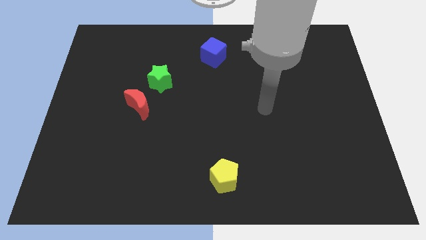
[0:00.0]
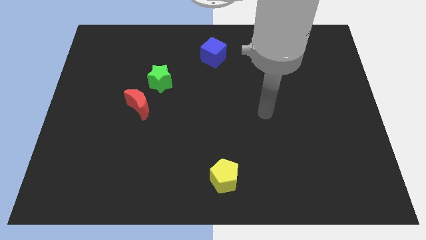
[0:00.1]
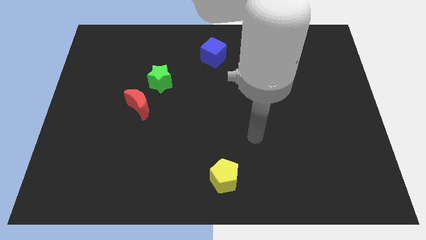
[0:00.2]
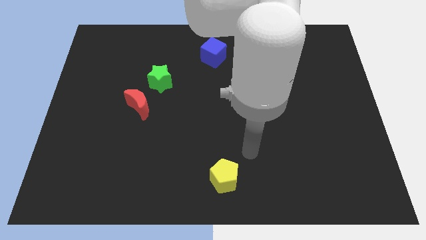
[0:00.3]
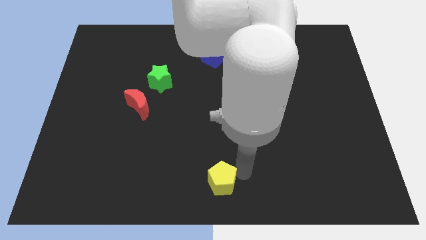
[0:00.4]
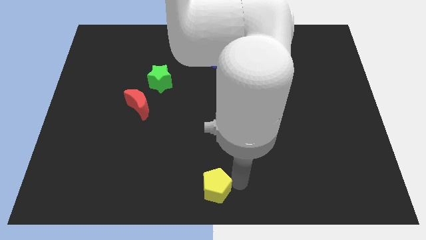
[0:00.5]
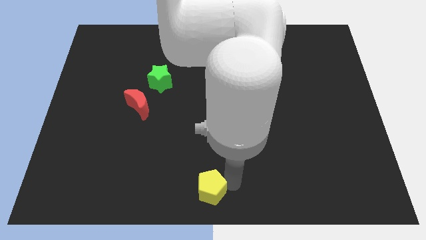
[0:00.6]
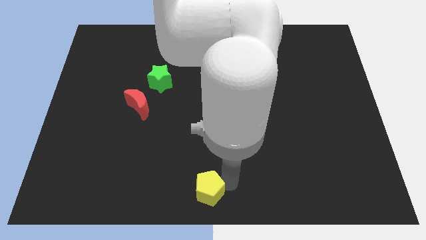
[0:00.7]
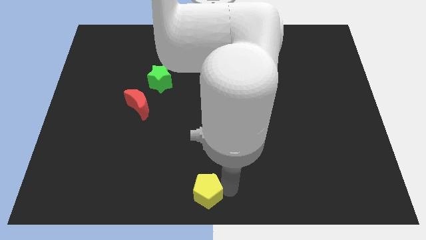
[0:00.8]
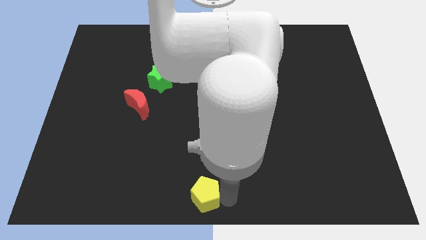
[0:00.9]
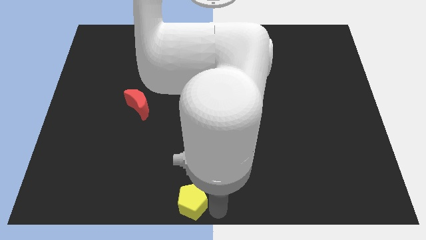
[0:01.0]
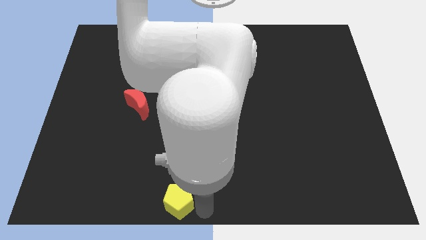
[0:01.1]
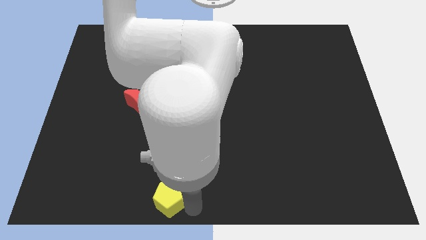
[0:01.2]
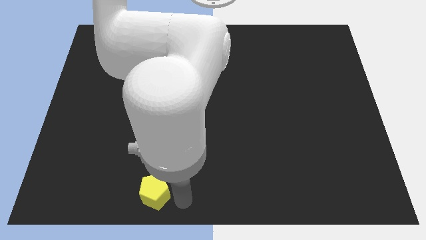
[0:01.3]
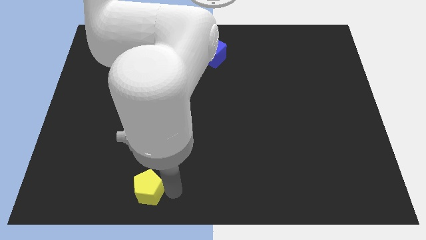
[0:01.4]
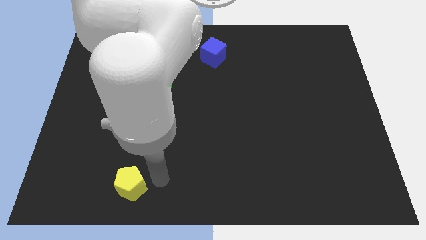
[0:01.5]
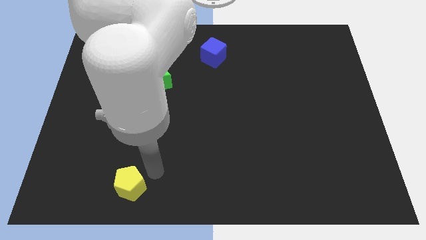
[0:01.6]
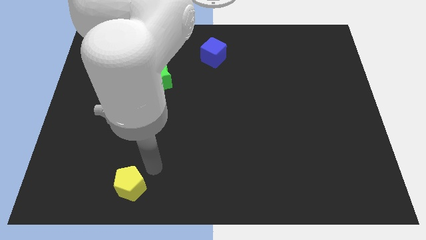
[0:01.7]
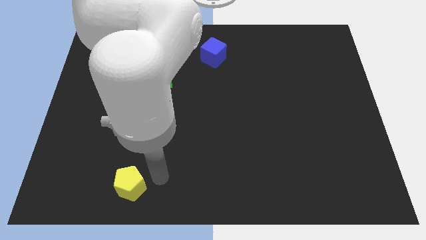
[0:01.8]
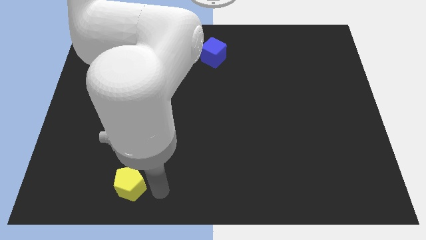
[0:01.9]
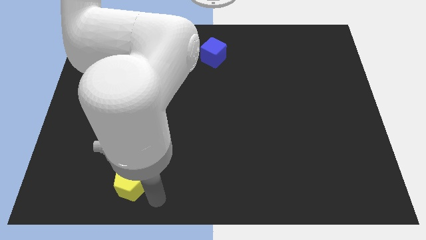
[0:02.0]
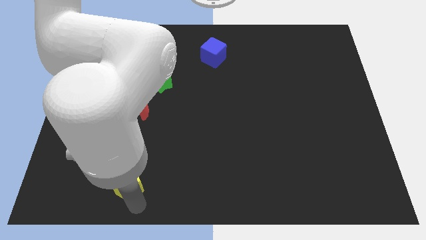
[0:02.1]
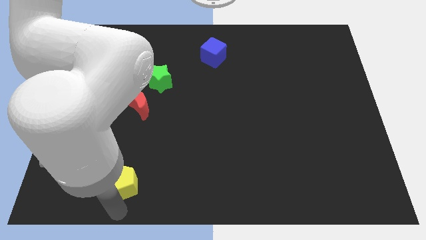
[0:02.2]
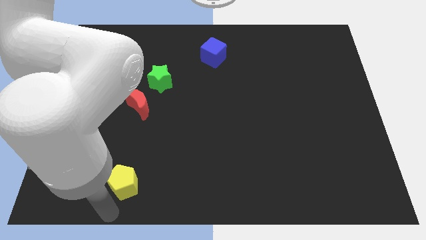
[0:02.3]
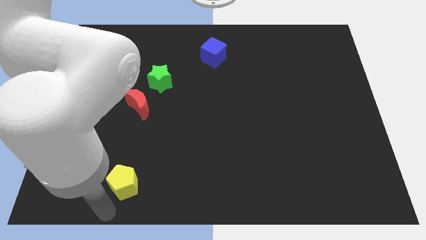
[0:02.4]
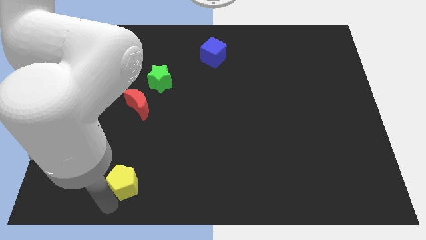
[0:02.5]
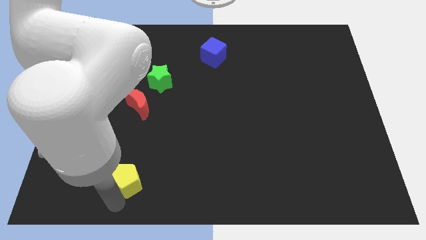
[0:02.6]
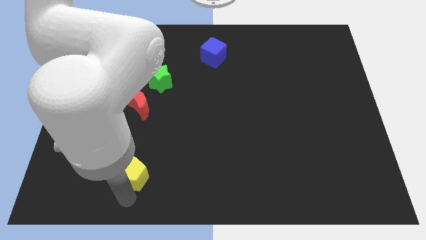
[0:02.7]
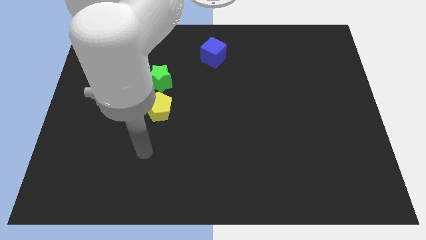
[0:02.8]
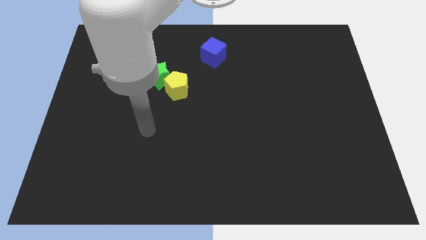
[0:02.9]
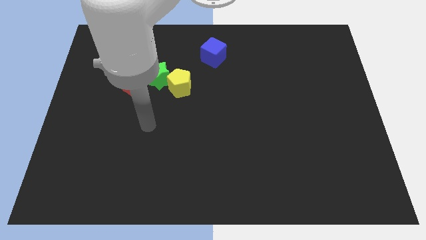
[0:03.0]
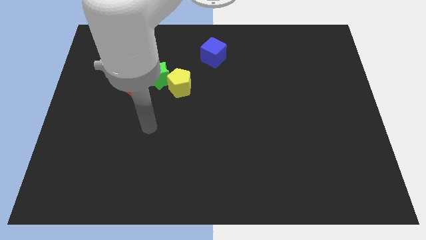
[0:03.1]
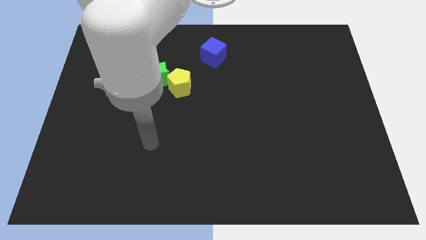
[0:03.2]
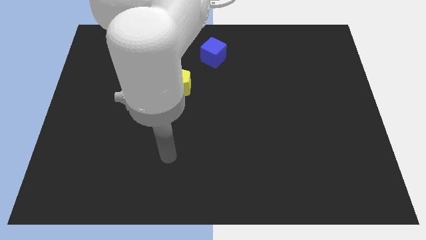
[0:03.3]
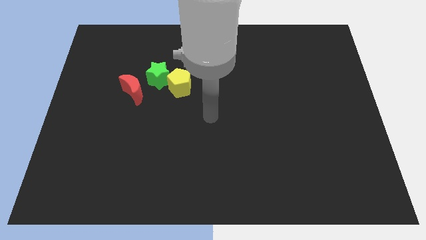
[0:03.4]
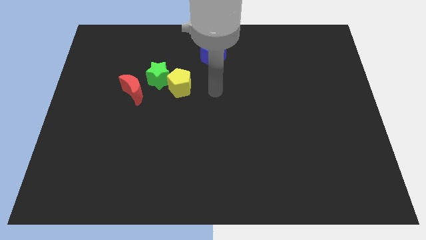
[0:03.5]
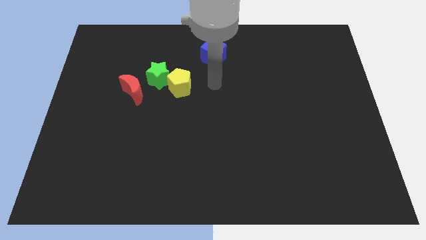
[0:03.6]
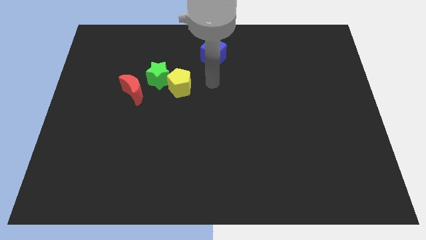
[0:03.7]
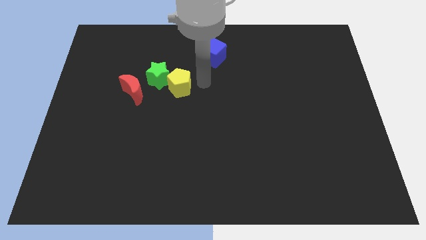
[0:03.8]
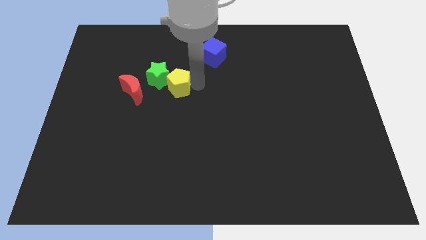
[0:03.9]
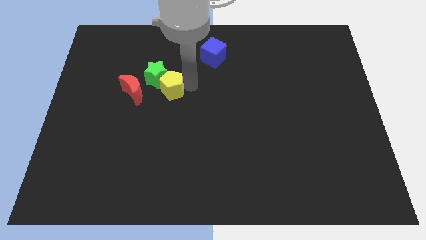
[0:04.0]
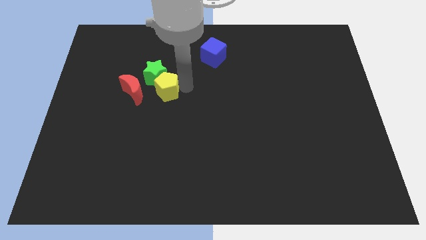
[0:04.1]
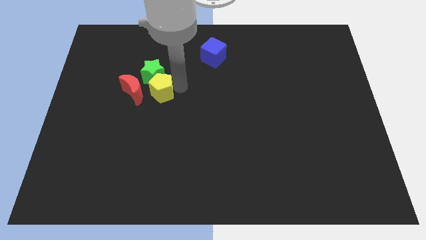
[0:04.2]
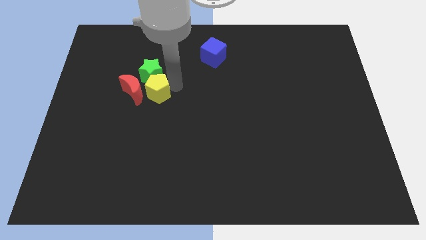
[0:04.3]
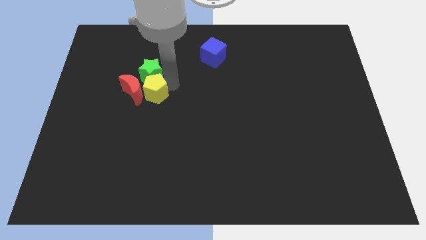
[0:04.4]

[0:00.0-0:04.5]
move the yellow block close to the red moon

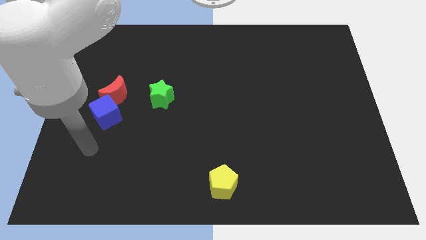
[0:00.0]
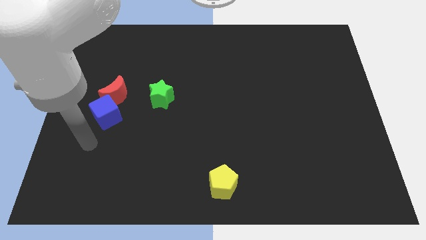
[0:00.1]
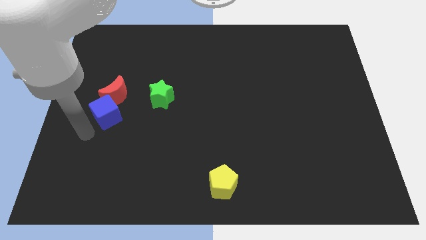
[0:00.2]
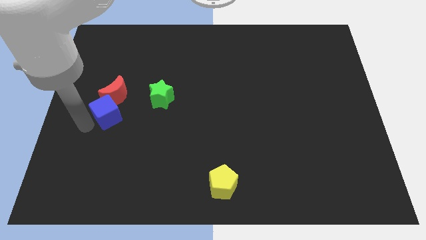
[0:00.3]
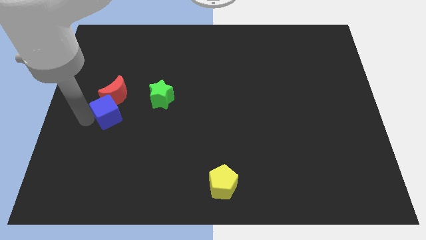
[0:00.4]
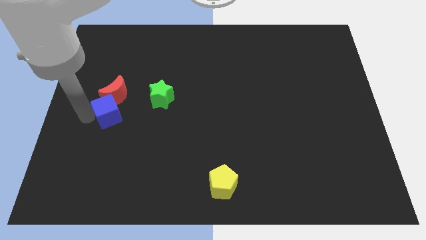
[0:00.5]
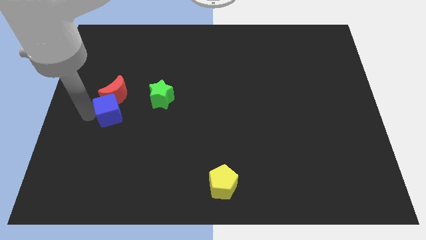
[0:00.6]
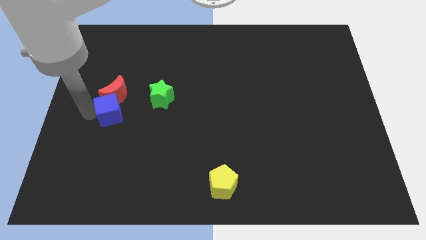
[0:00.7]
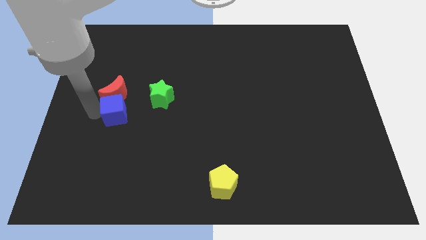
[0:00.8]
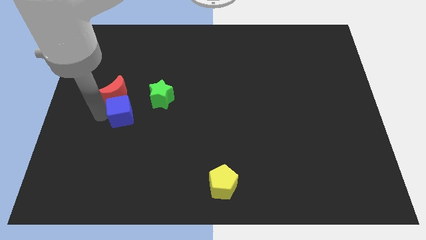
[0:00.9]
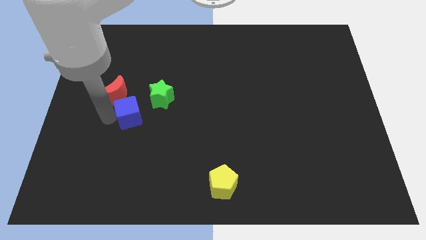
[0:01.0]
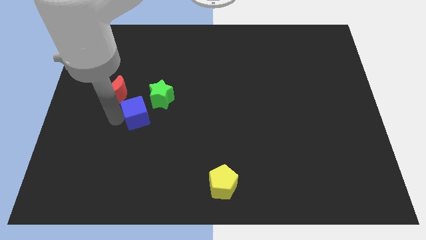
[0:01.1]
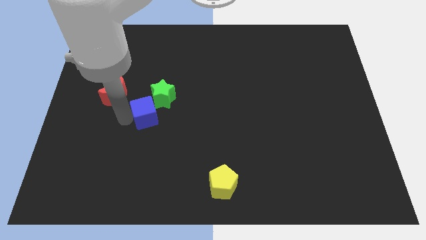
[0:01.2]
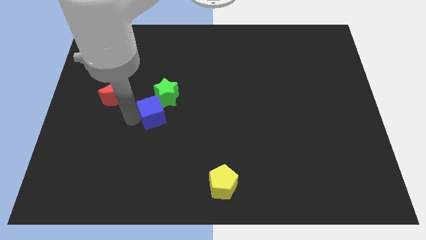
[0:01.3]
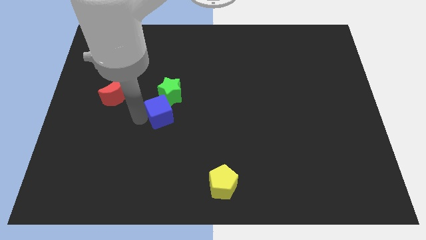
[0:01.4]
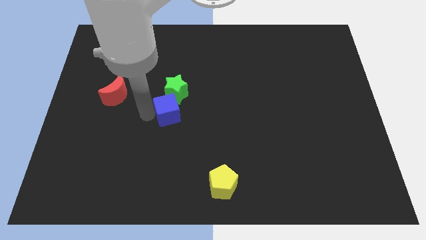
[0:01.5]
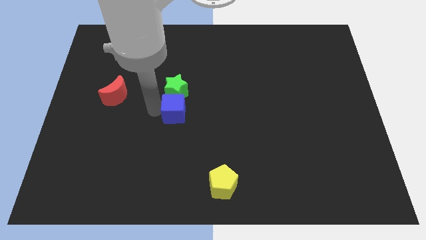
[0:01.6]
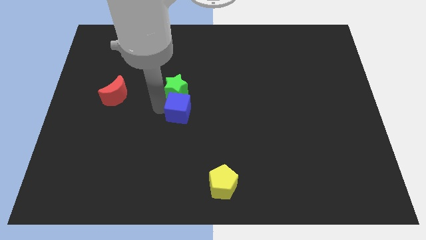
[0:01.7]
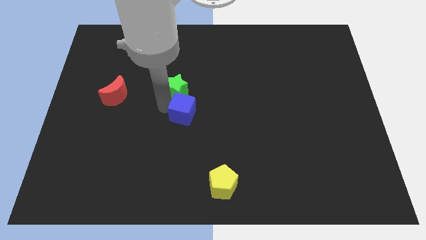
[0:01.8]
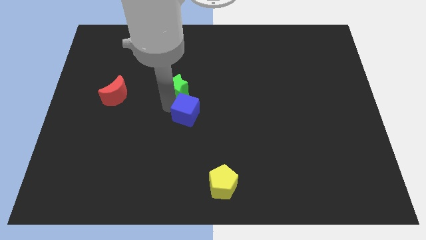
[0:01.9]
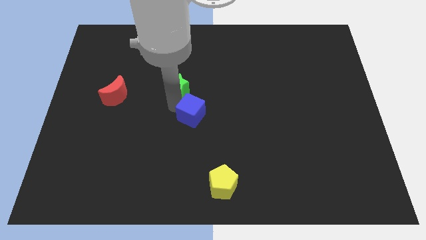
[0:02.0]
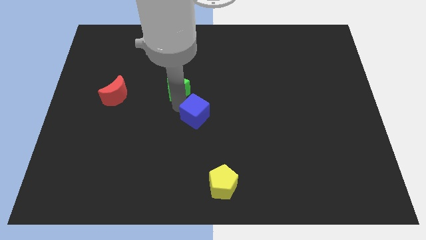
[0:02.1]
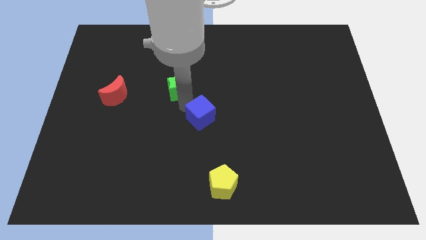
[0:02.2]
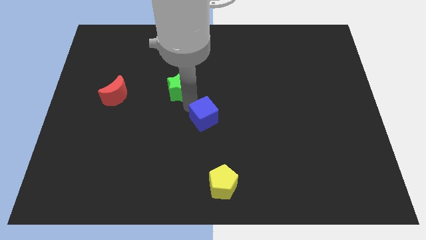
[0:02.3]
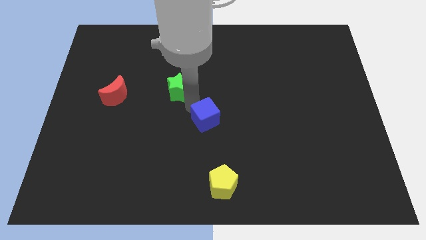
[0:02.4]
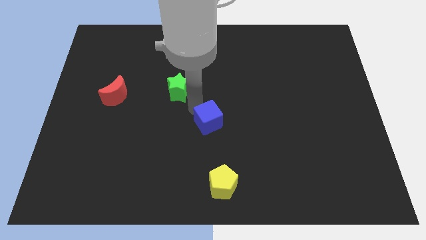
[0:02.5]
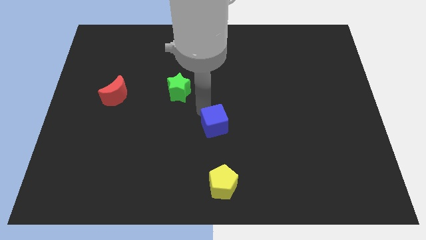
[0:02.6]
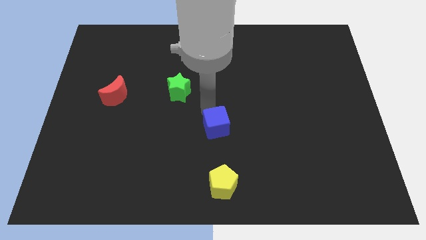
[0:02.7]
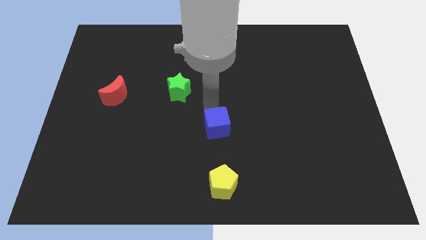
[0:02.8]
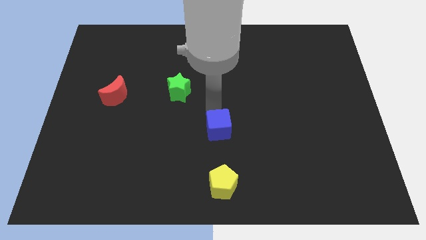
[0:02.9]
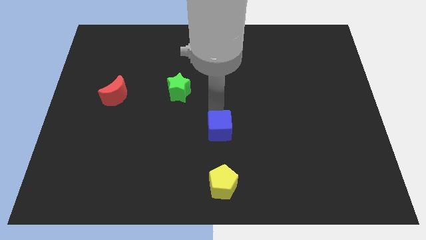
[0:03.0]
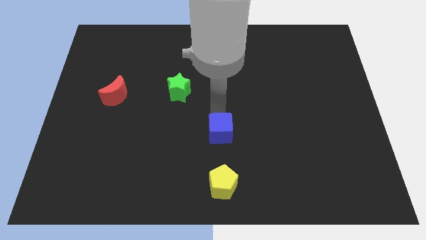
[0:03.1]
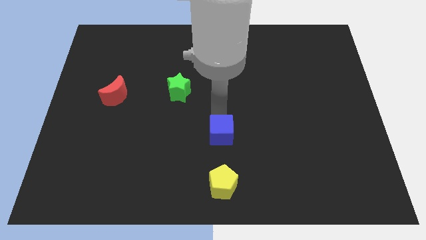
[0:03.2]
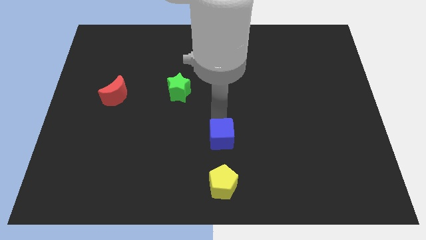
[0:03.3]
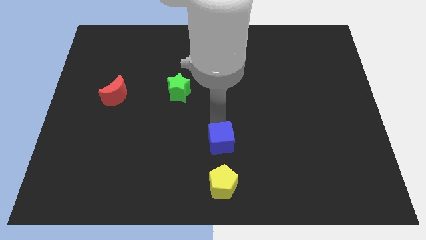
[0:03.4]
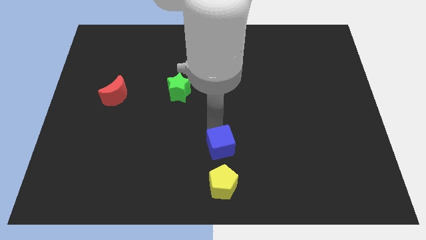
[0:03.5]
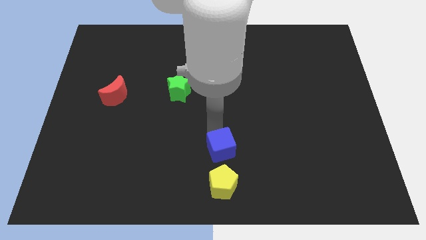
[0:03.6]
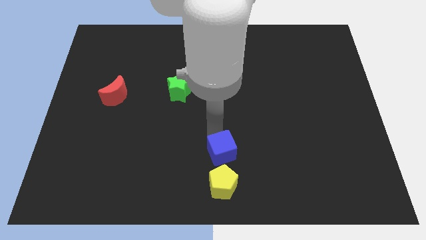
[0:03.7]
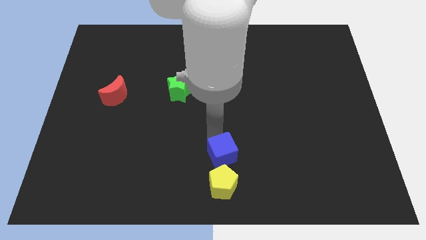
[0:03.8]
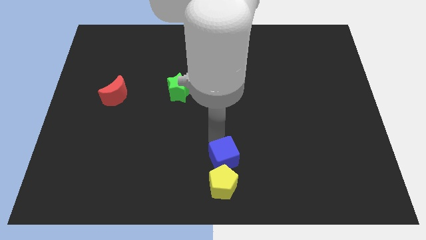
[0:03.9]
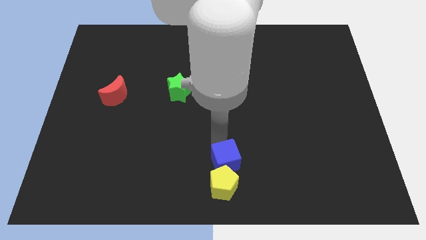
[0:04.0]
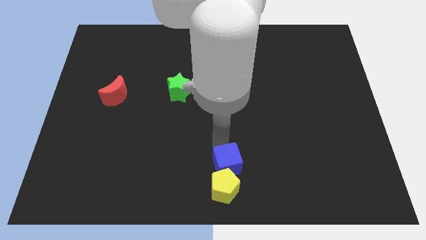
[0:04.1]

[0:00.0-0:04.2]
move the blue cube towards the pentagon
